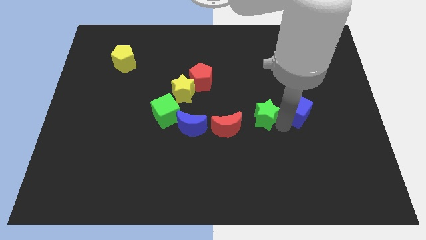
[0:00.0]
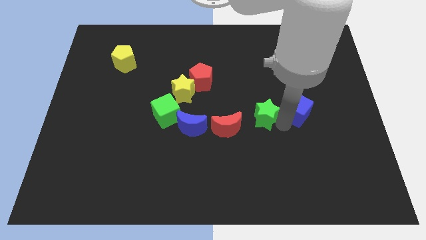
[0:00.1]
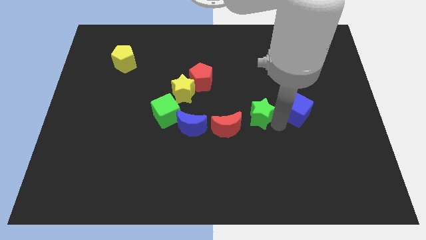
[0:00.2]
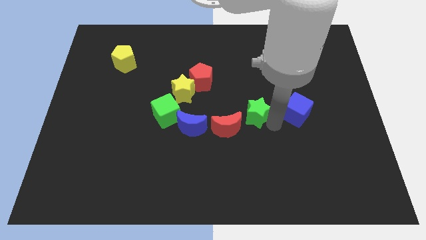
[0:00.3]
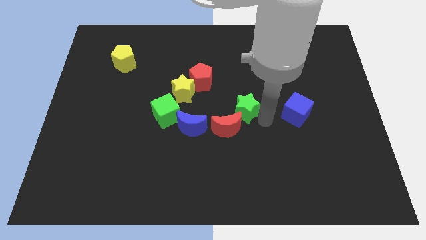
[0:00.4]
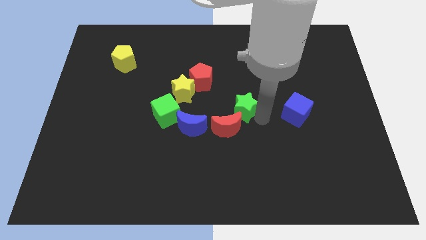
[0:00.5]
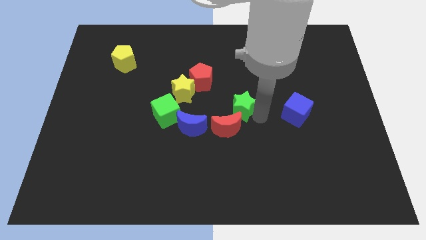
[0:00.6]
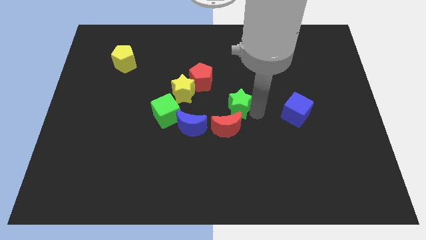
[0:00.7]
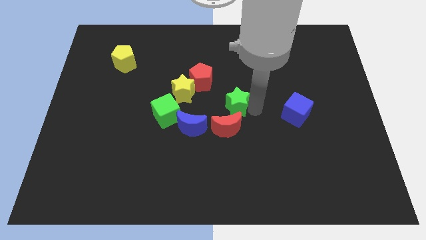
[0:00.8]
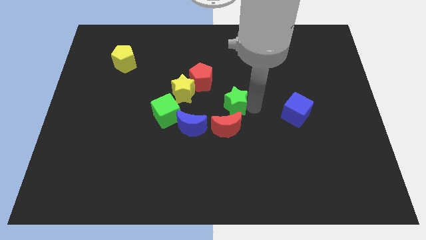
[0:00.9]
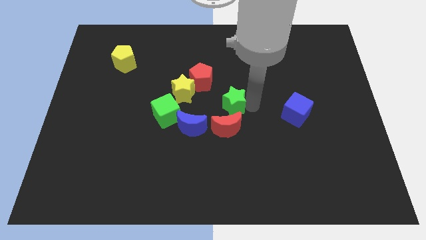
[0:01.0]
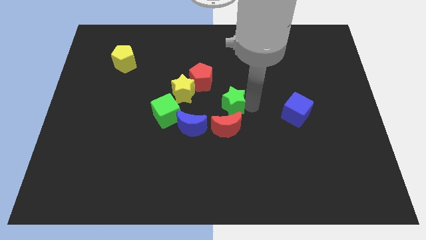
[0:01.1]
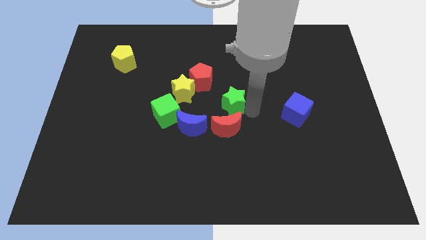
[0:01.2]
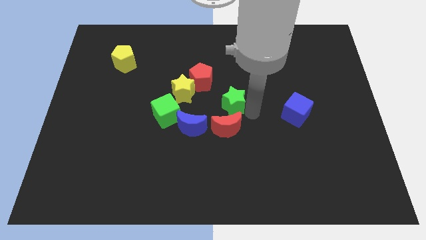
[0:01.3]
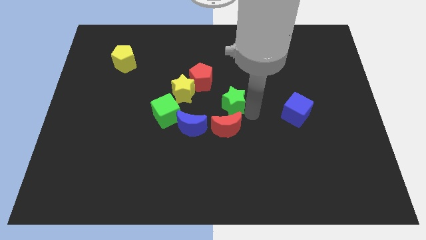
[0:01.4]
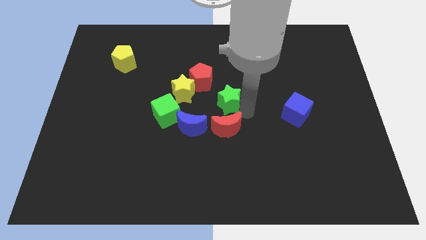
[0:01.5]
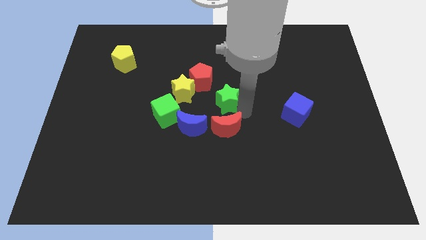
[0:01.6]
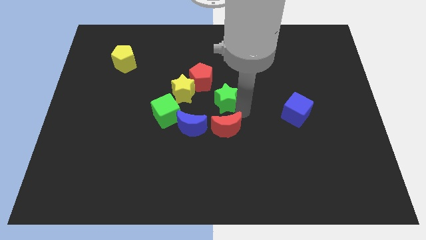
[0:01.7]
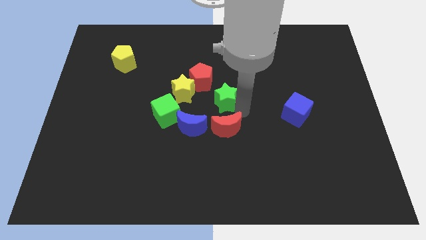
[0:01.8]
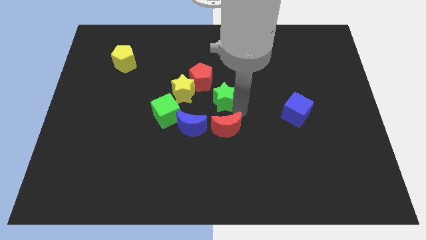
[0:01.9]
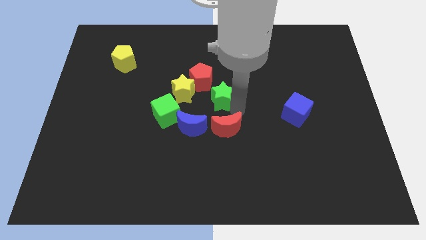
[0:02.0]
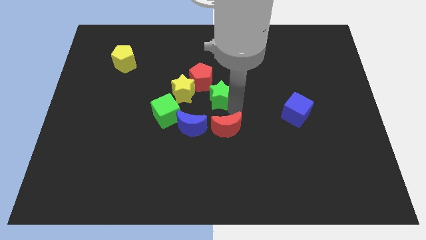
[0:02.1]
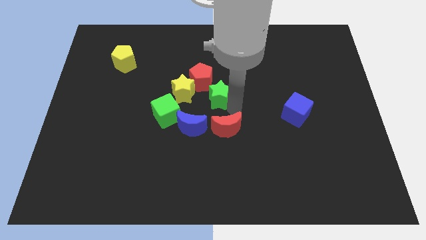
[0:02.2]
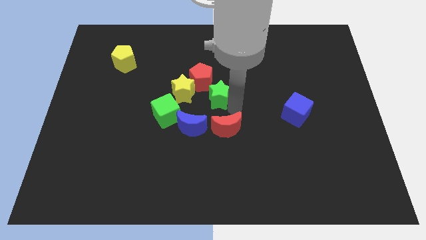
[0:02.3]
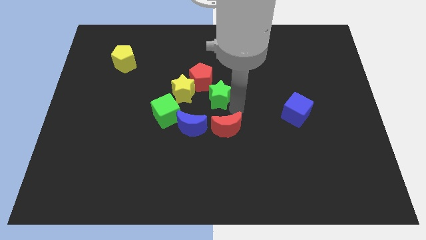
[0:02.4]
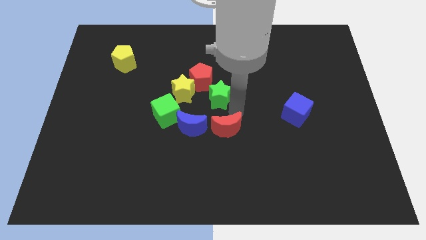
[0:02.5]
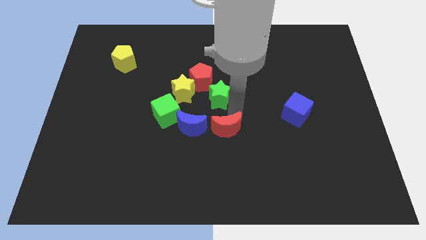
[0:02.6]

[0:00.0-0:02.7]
push the green star towards the yellow star to form a triangle

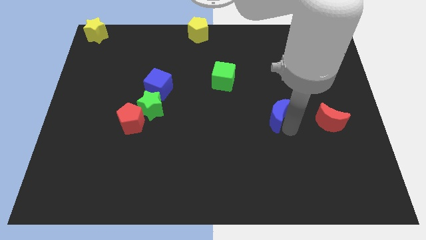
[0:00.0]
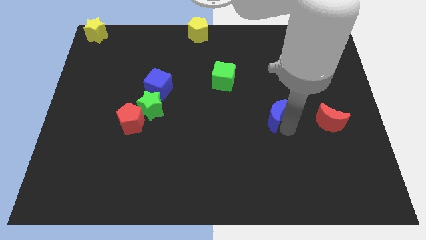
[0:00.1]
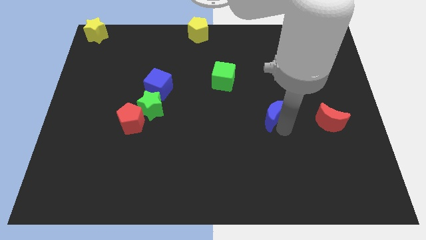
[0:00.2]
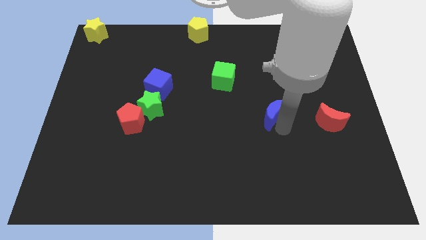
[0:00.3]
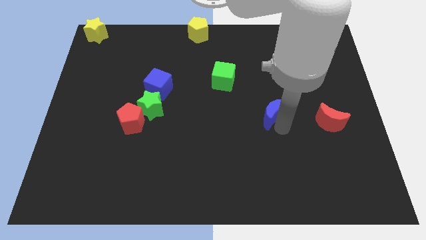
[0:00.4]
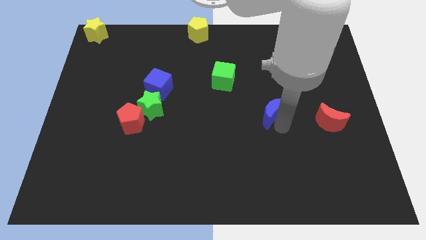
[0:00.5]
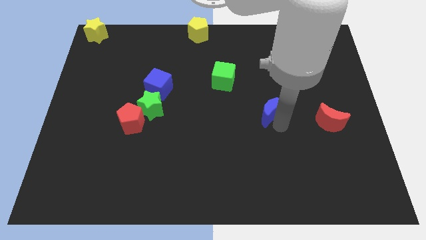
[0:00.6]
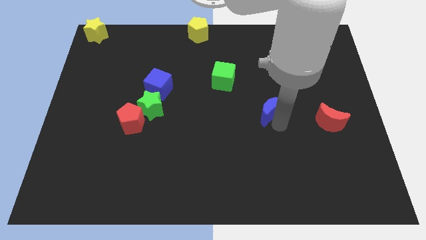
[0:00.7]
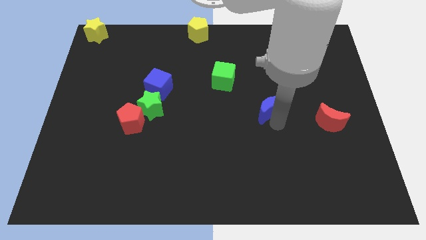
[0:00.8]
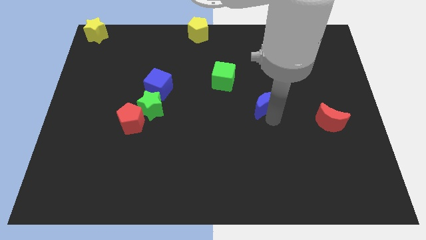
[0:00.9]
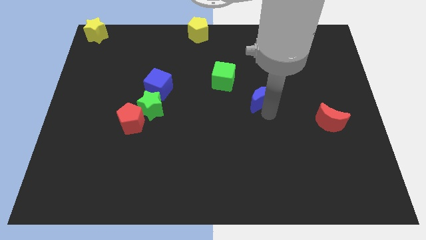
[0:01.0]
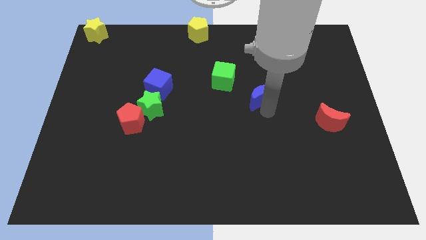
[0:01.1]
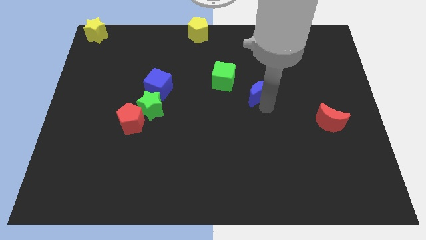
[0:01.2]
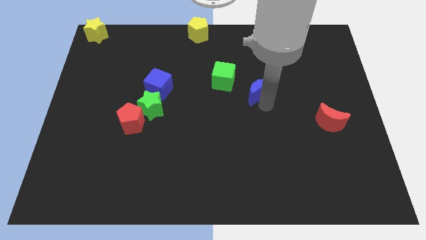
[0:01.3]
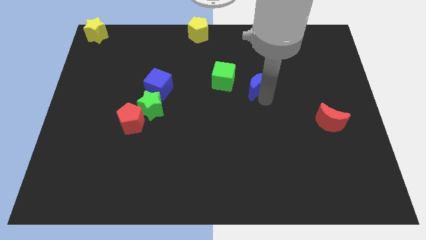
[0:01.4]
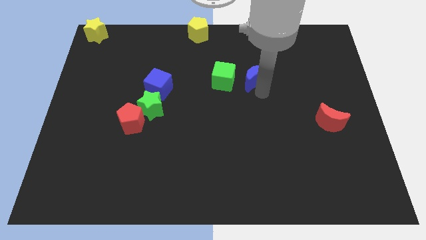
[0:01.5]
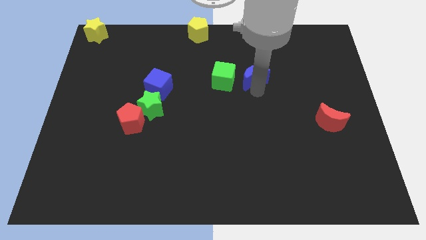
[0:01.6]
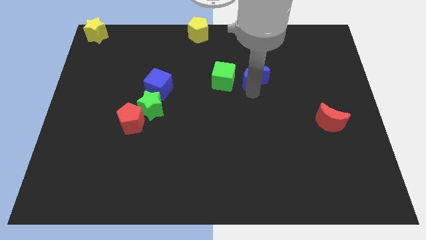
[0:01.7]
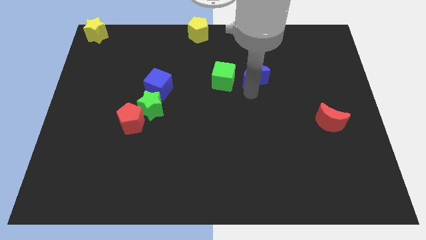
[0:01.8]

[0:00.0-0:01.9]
place blue moon to the right of green cube

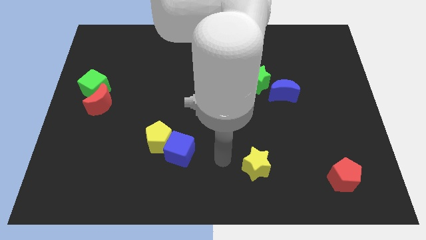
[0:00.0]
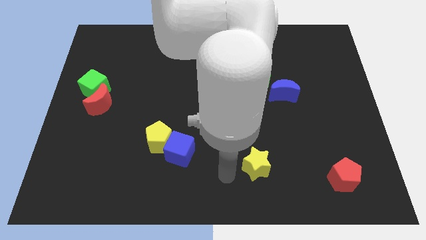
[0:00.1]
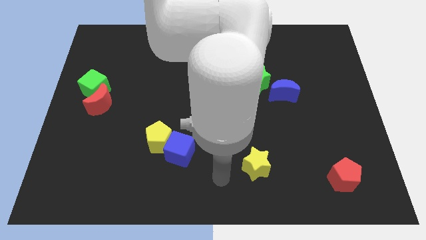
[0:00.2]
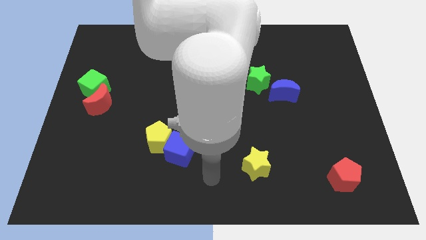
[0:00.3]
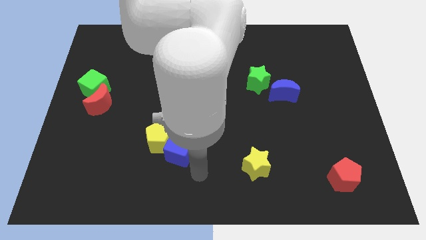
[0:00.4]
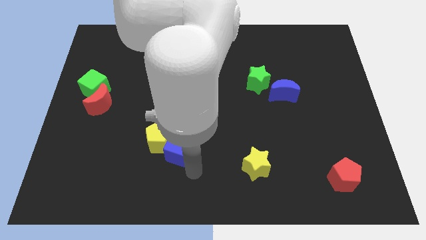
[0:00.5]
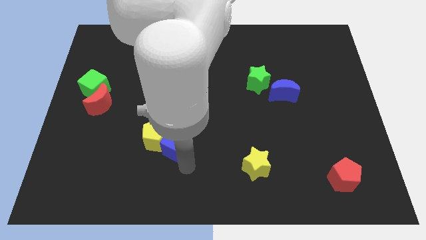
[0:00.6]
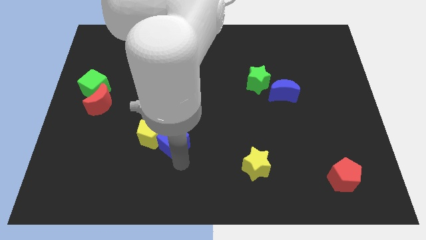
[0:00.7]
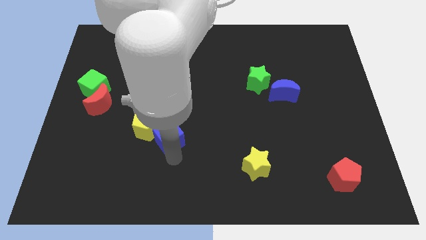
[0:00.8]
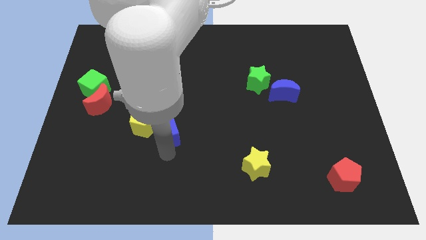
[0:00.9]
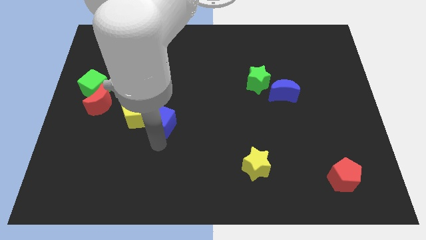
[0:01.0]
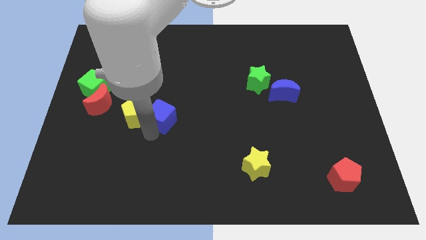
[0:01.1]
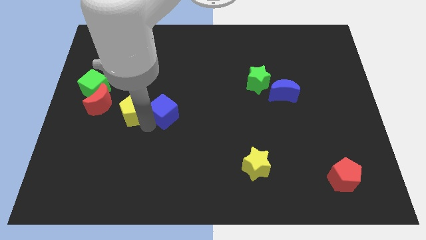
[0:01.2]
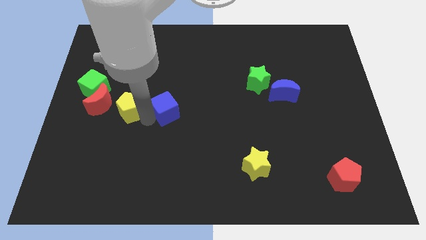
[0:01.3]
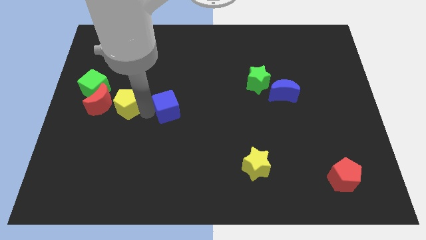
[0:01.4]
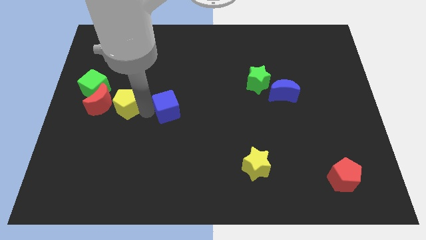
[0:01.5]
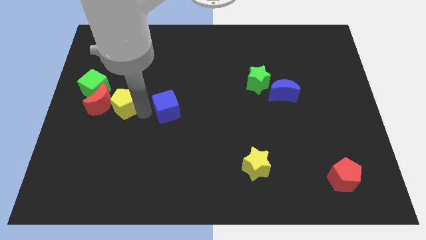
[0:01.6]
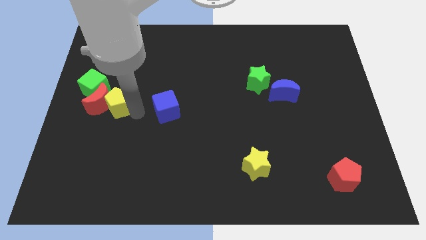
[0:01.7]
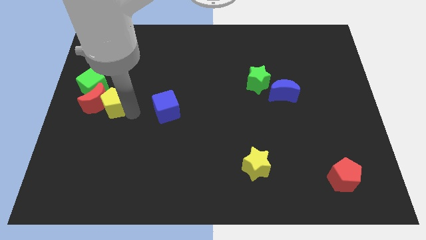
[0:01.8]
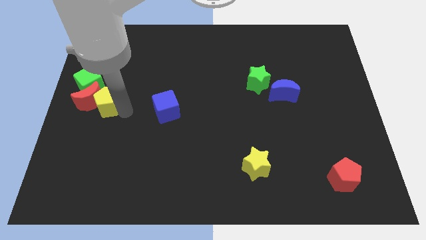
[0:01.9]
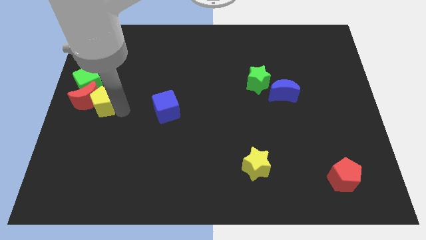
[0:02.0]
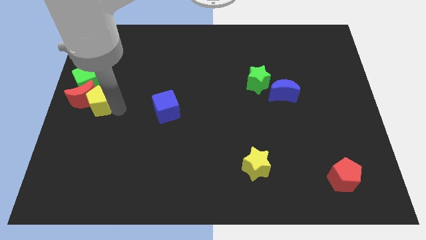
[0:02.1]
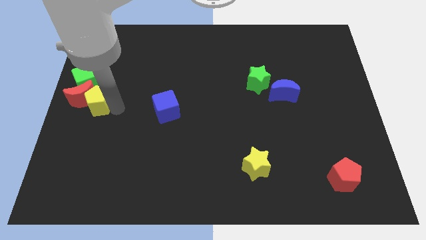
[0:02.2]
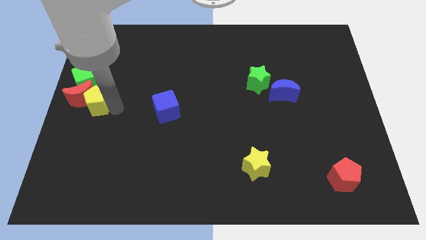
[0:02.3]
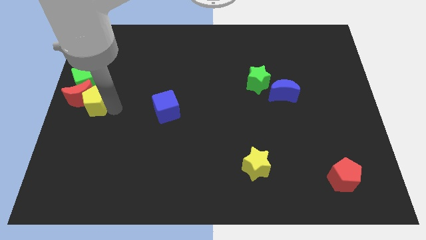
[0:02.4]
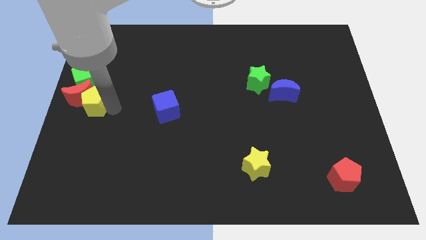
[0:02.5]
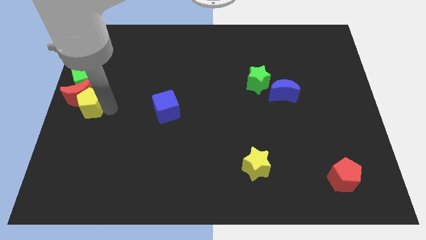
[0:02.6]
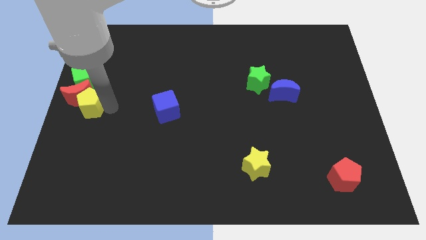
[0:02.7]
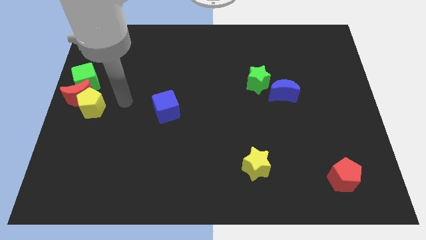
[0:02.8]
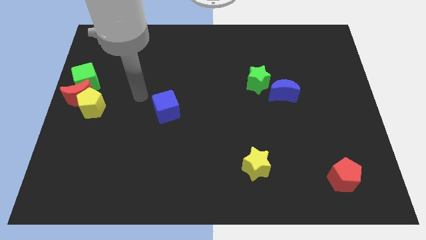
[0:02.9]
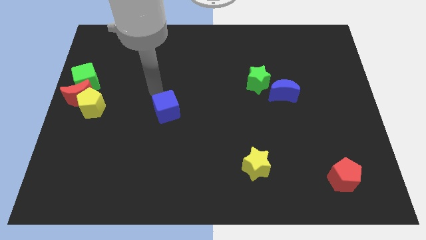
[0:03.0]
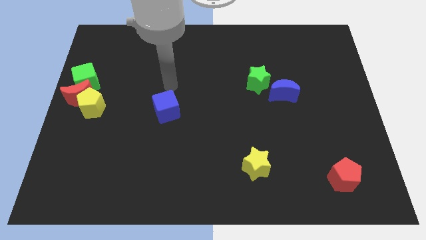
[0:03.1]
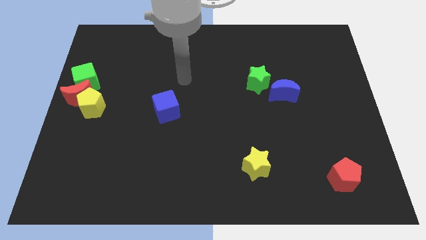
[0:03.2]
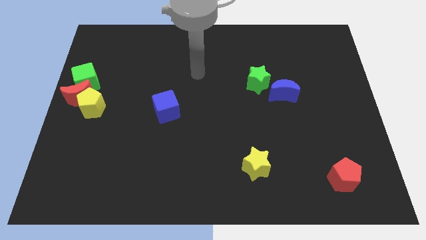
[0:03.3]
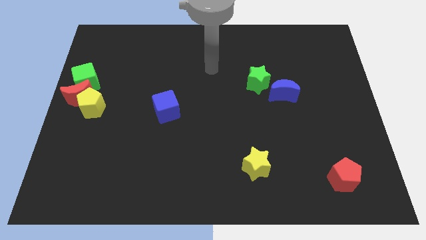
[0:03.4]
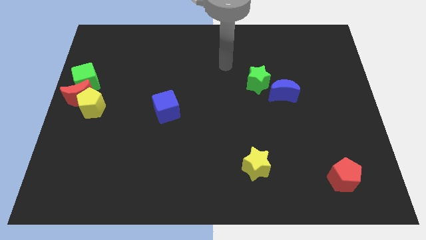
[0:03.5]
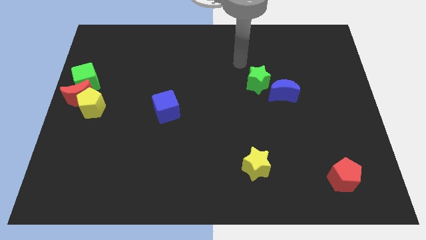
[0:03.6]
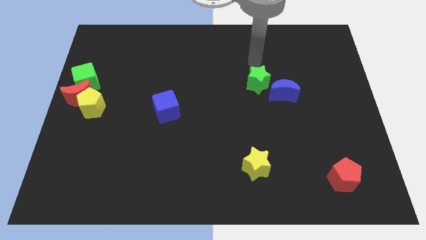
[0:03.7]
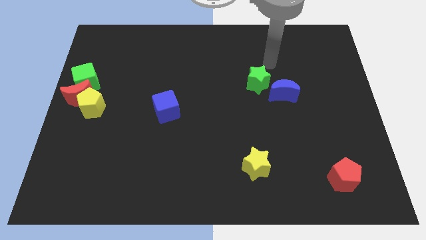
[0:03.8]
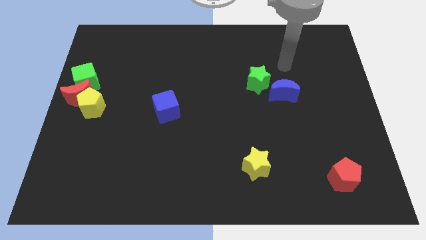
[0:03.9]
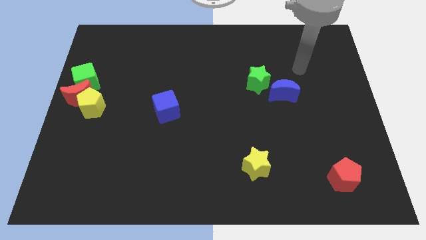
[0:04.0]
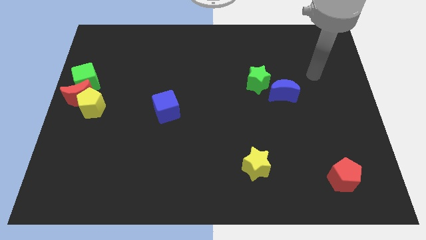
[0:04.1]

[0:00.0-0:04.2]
move yellow pentagon to the bottom of red moon

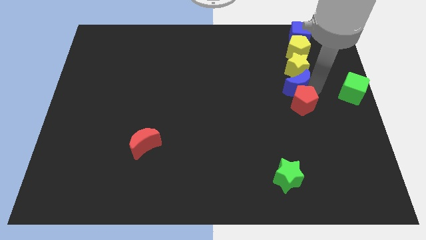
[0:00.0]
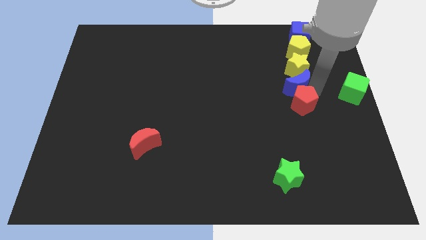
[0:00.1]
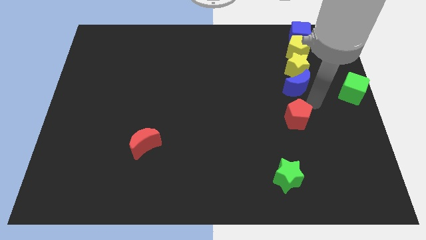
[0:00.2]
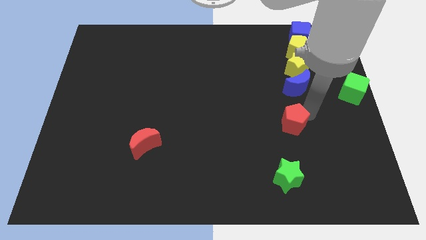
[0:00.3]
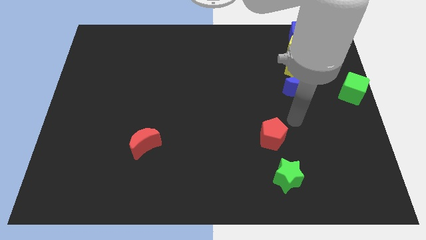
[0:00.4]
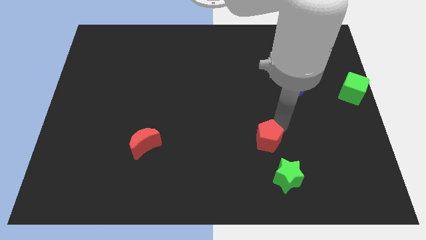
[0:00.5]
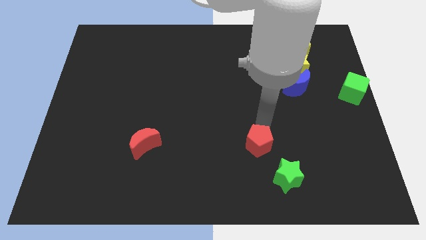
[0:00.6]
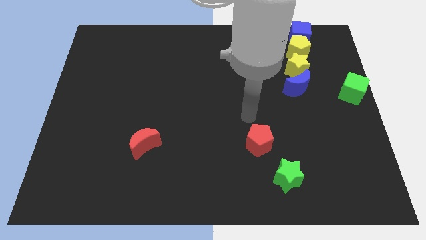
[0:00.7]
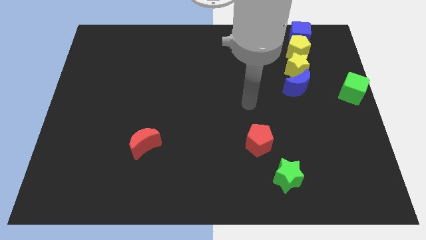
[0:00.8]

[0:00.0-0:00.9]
move the red pentagon to the top left of the green star
